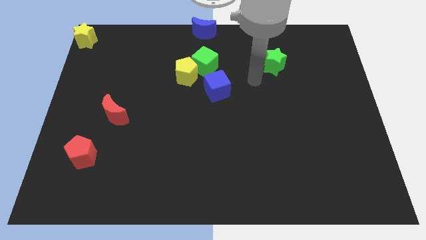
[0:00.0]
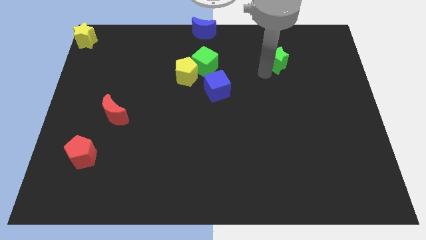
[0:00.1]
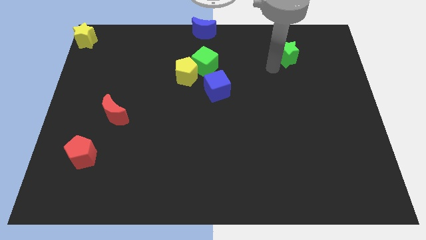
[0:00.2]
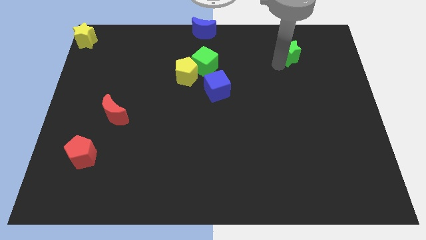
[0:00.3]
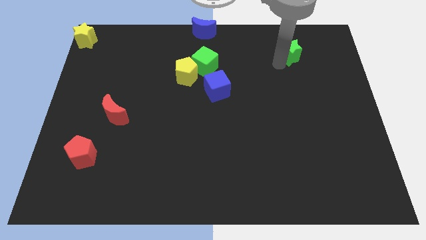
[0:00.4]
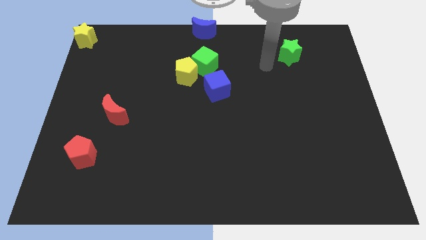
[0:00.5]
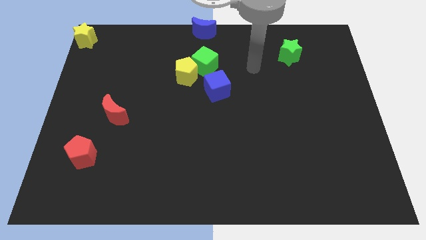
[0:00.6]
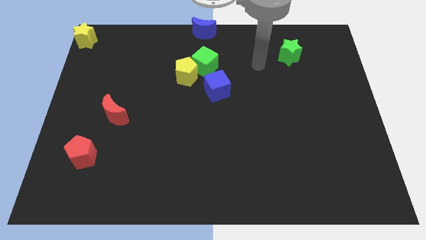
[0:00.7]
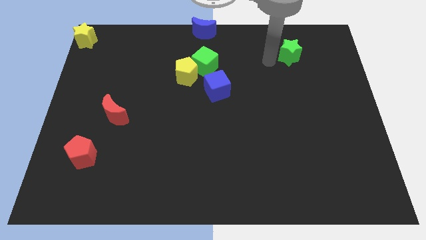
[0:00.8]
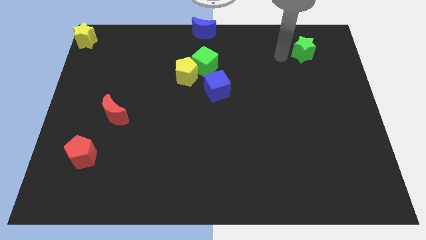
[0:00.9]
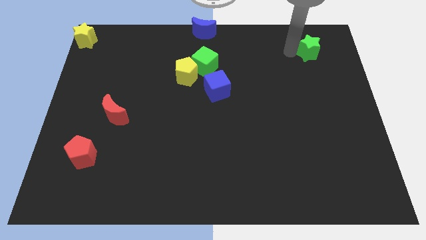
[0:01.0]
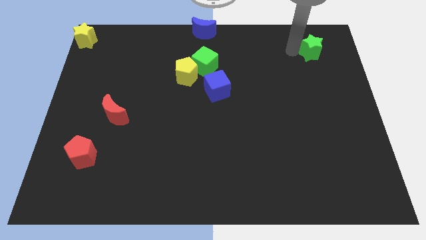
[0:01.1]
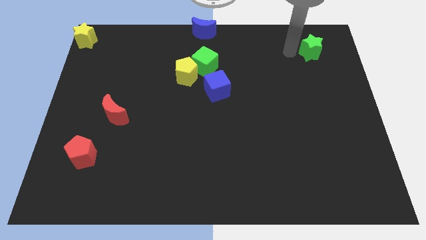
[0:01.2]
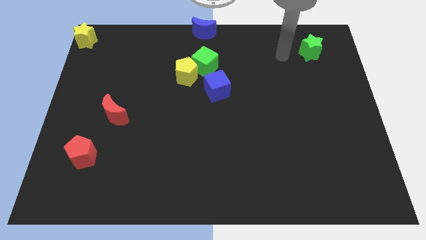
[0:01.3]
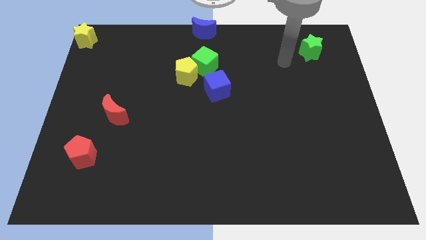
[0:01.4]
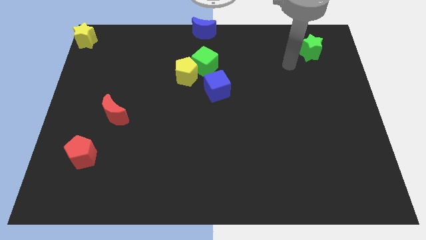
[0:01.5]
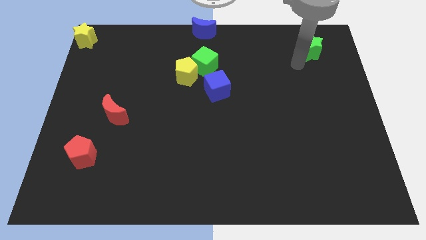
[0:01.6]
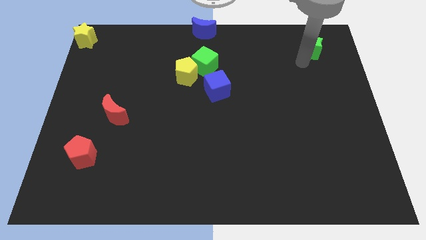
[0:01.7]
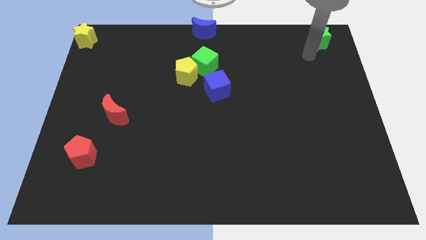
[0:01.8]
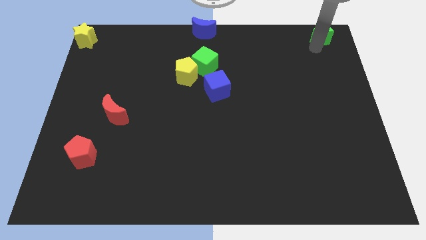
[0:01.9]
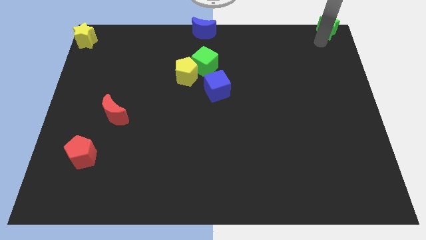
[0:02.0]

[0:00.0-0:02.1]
put the green star at the top right corner of the board

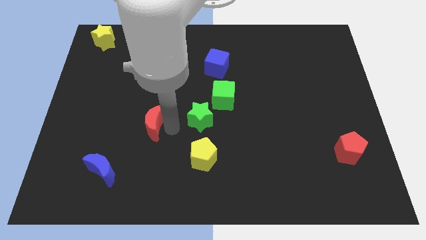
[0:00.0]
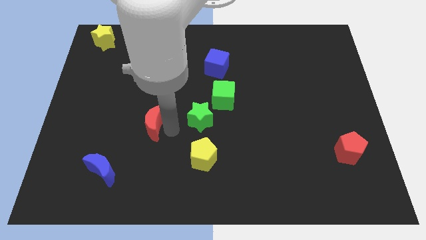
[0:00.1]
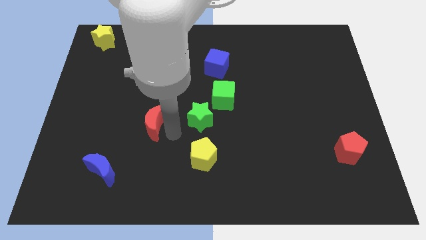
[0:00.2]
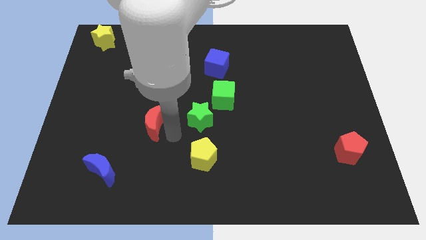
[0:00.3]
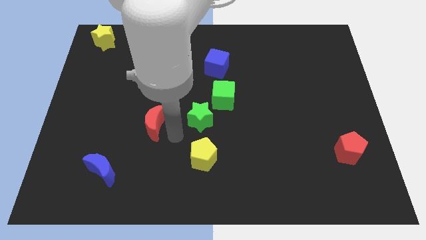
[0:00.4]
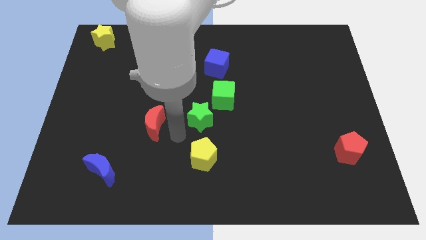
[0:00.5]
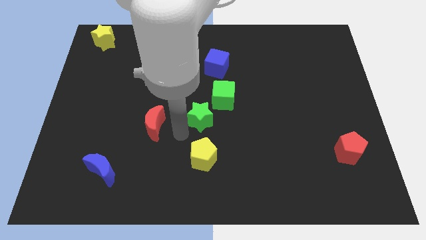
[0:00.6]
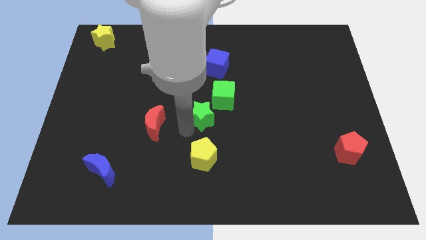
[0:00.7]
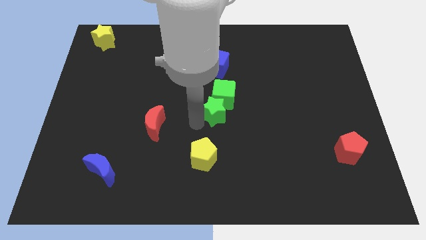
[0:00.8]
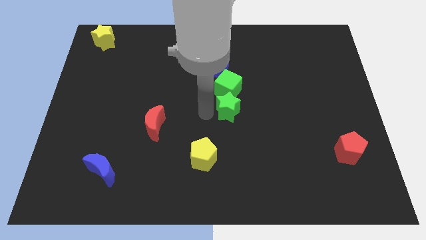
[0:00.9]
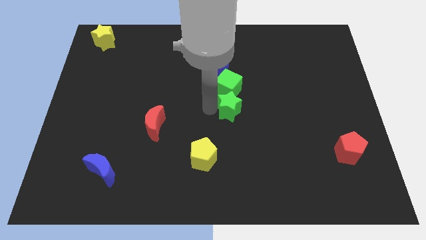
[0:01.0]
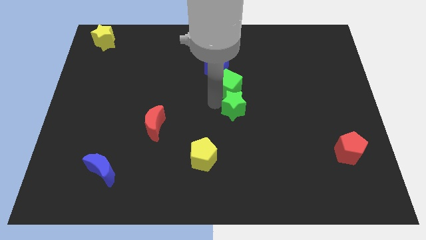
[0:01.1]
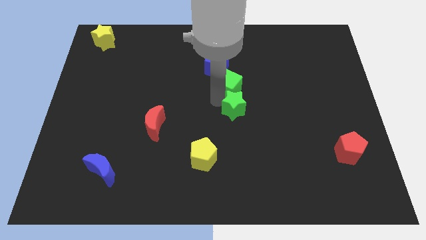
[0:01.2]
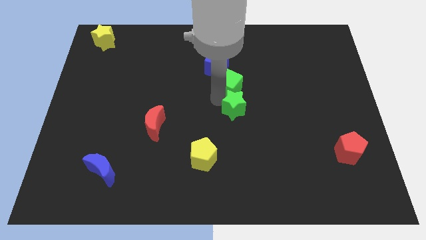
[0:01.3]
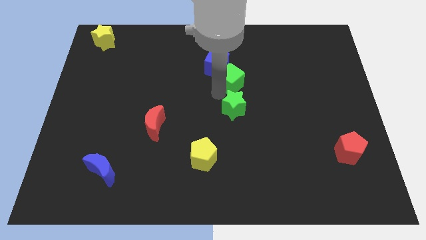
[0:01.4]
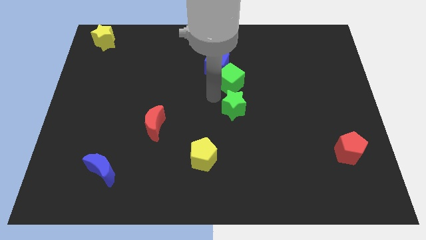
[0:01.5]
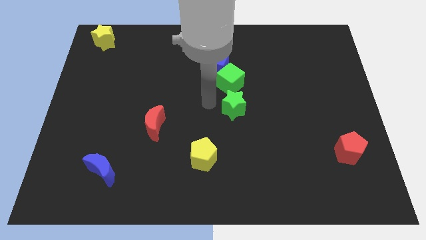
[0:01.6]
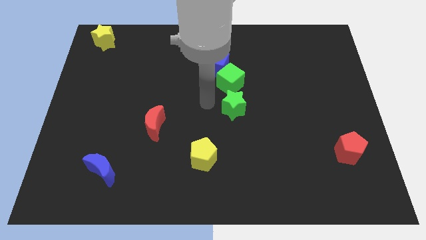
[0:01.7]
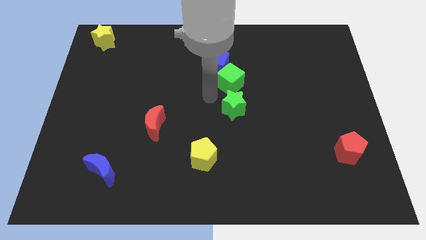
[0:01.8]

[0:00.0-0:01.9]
move green star in to green cube

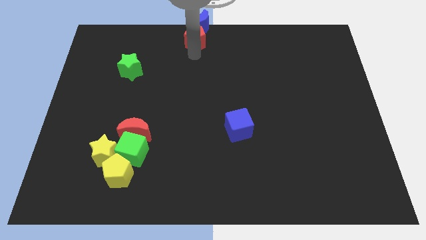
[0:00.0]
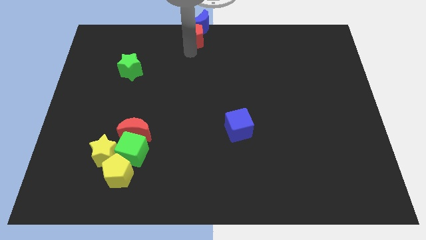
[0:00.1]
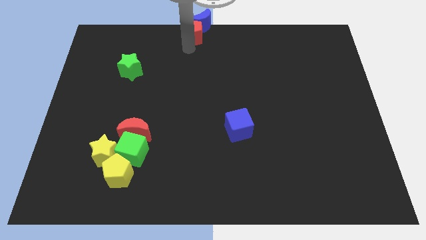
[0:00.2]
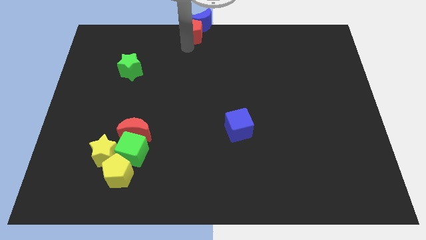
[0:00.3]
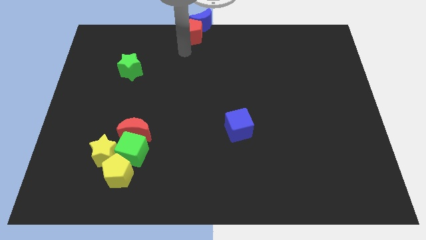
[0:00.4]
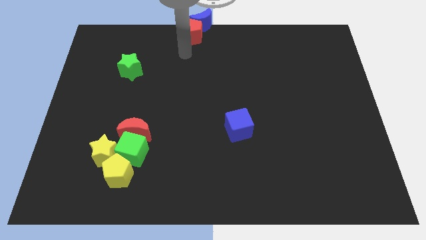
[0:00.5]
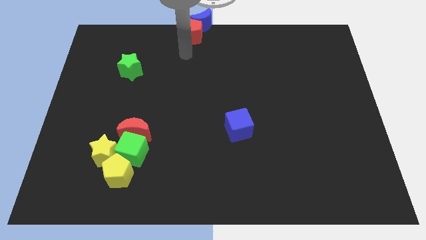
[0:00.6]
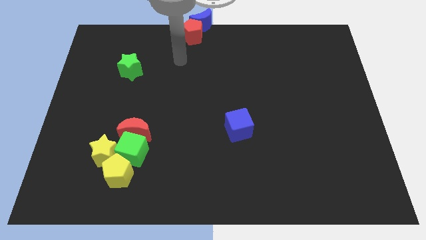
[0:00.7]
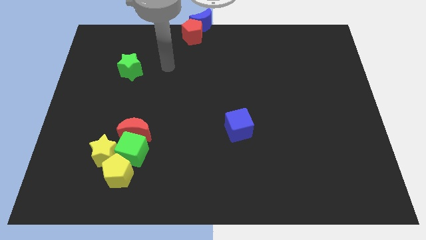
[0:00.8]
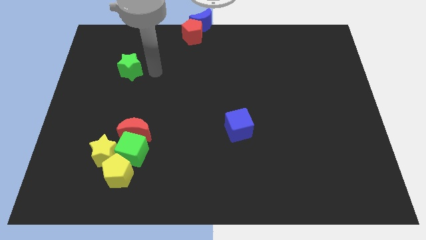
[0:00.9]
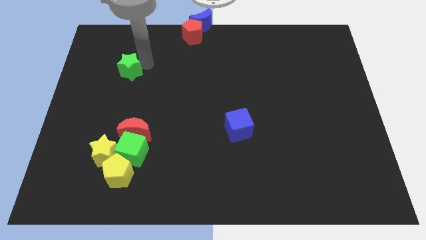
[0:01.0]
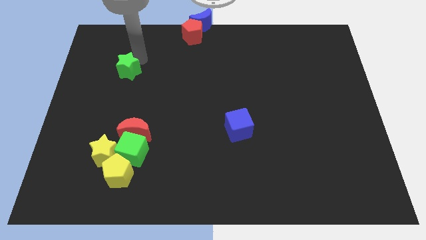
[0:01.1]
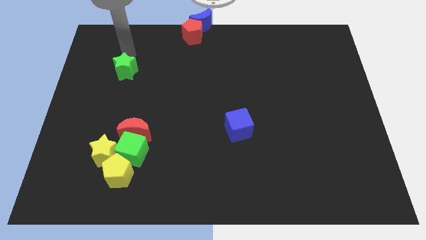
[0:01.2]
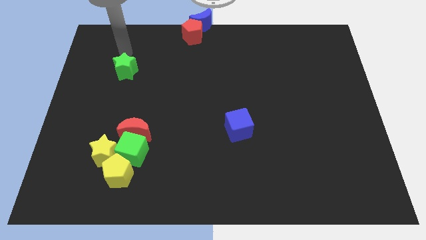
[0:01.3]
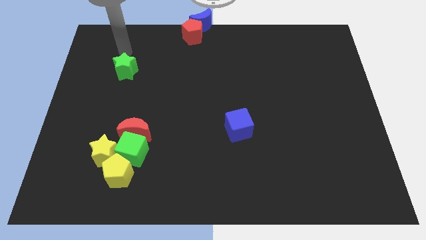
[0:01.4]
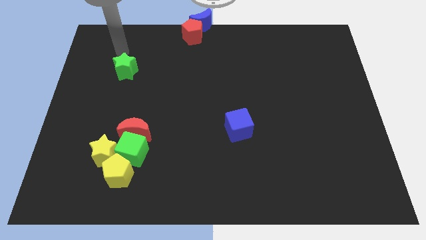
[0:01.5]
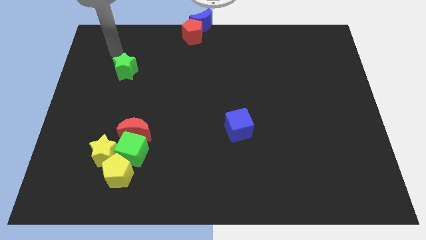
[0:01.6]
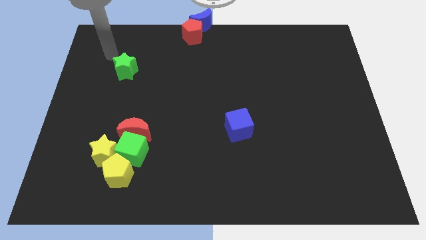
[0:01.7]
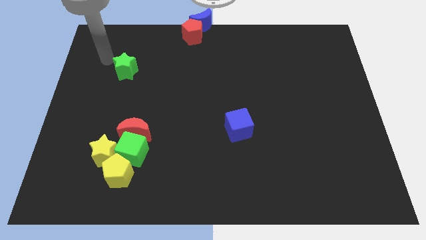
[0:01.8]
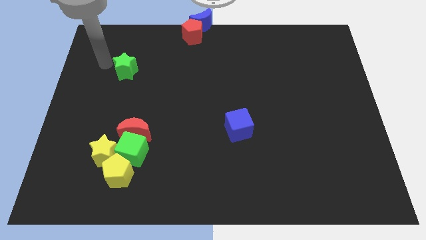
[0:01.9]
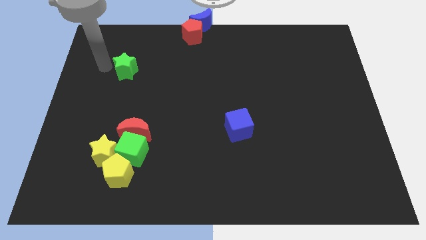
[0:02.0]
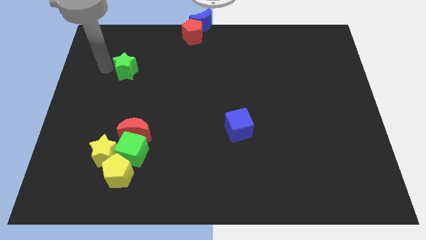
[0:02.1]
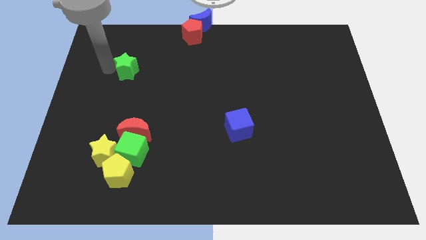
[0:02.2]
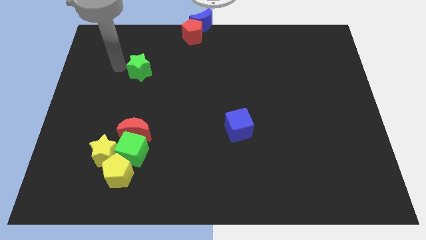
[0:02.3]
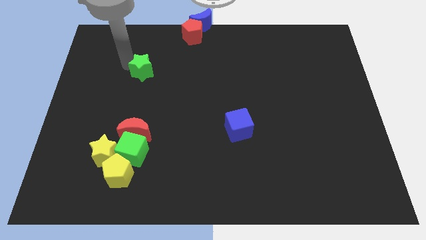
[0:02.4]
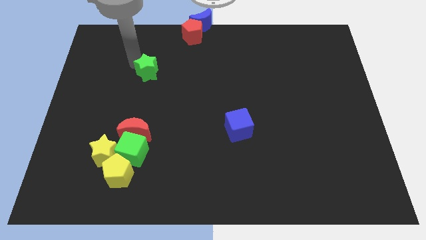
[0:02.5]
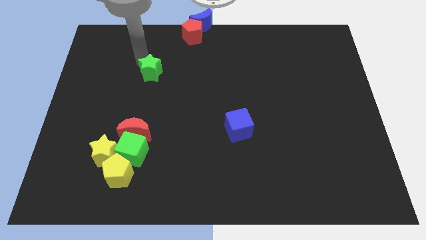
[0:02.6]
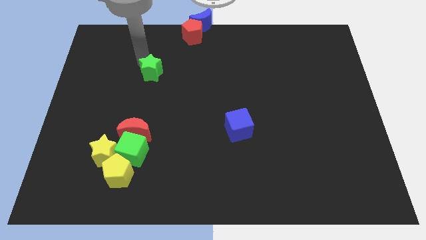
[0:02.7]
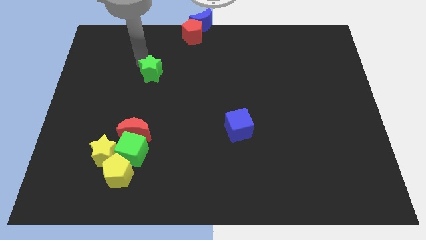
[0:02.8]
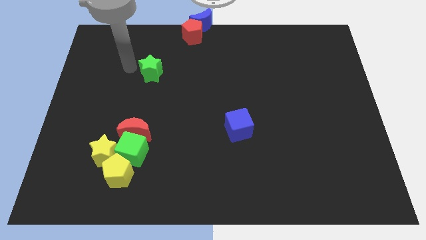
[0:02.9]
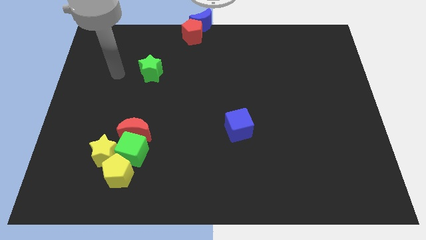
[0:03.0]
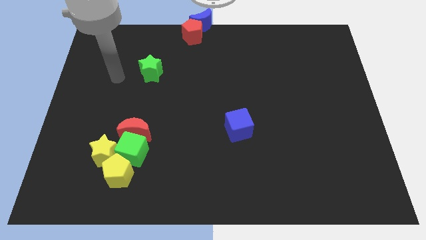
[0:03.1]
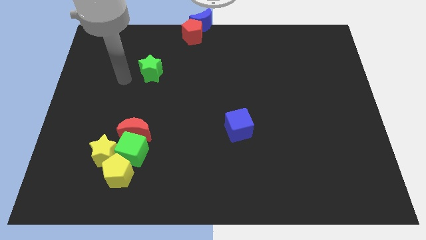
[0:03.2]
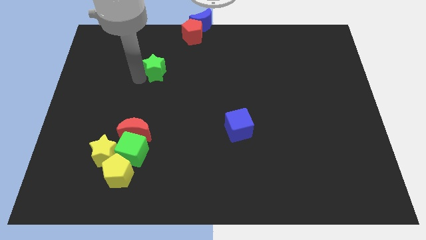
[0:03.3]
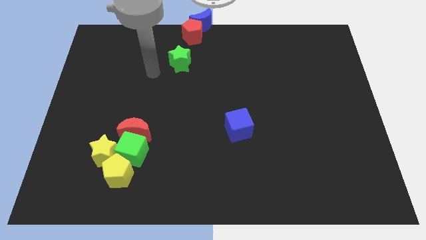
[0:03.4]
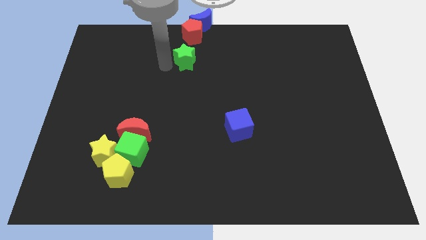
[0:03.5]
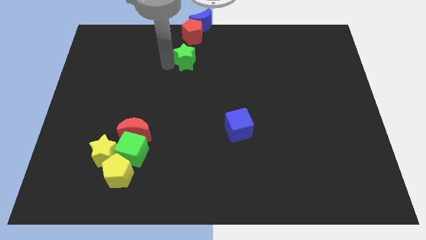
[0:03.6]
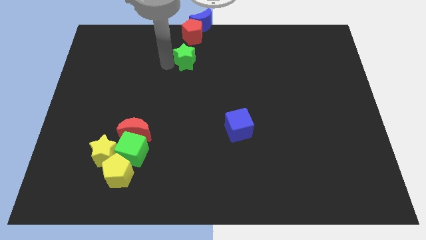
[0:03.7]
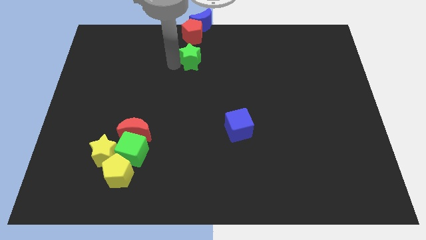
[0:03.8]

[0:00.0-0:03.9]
place the green star down to the red pentagon

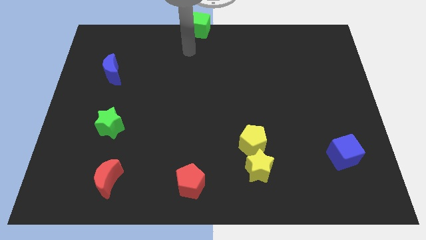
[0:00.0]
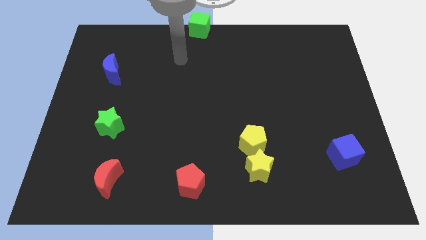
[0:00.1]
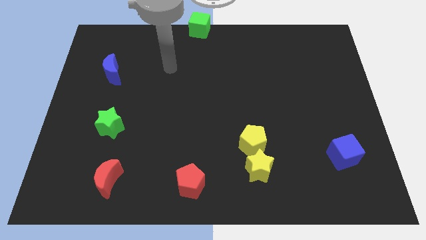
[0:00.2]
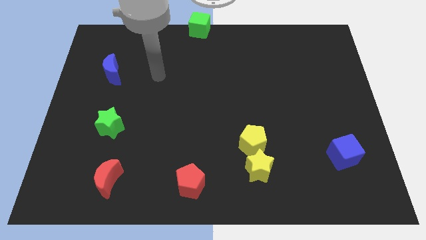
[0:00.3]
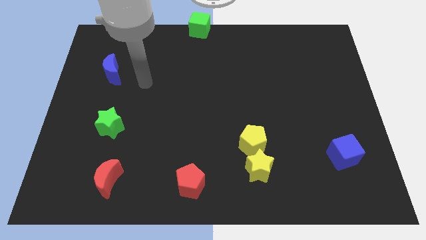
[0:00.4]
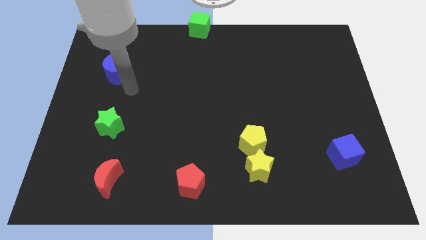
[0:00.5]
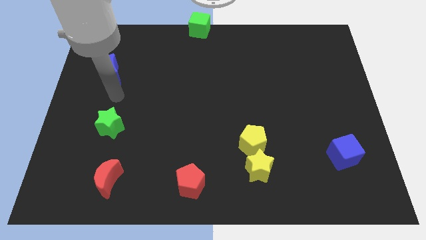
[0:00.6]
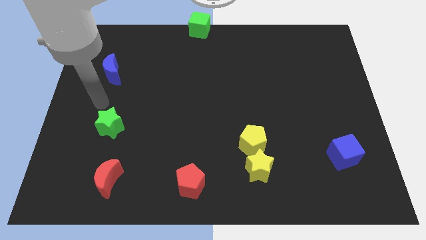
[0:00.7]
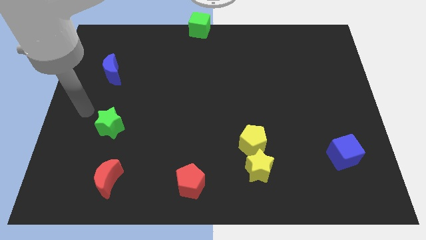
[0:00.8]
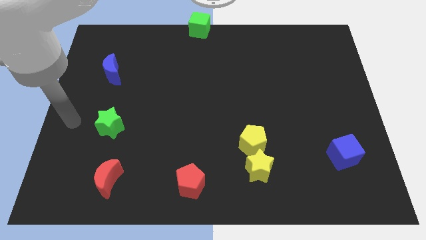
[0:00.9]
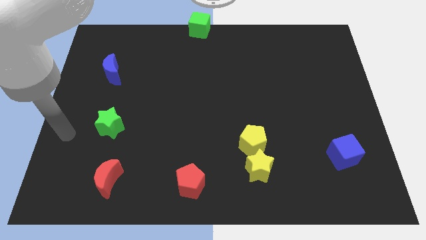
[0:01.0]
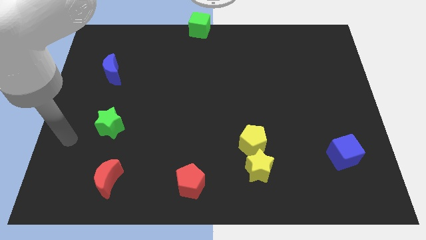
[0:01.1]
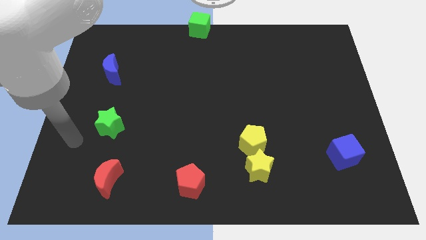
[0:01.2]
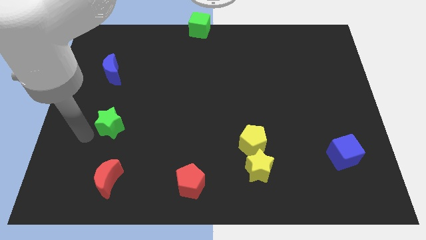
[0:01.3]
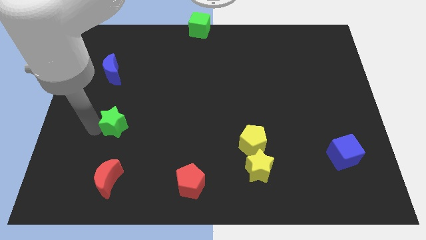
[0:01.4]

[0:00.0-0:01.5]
tap the left side of the green star
